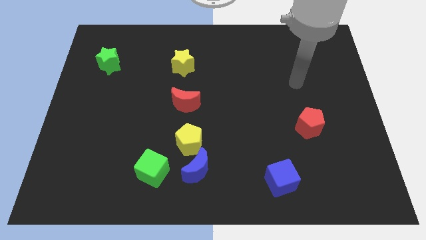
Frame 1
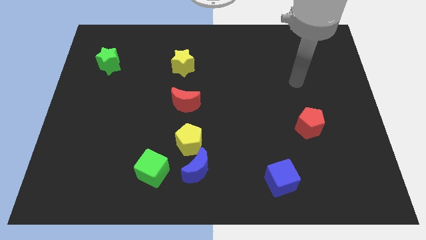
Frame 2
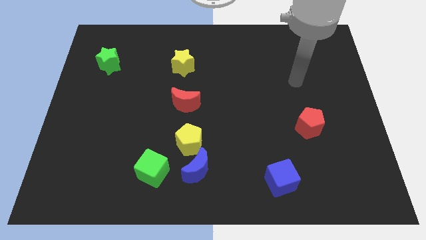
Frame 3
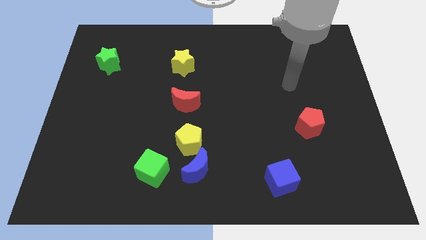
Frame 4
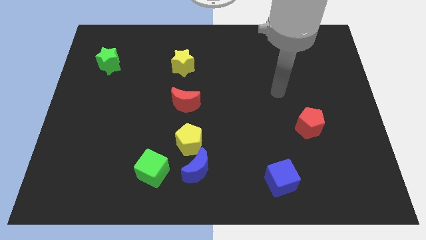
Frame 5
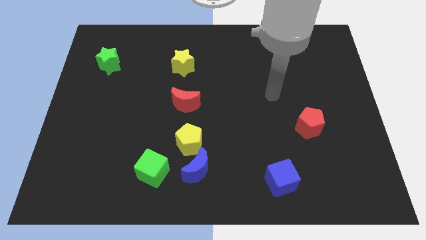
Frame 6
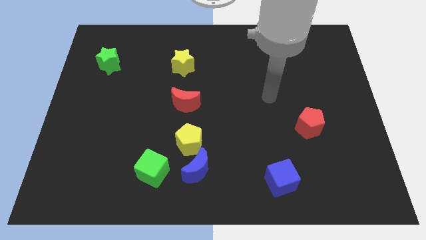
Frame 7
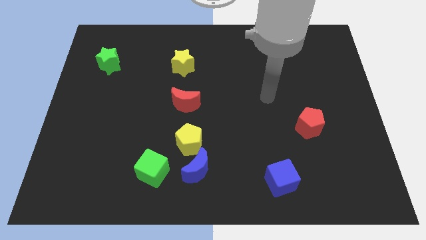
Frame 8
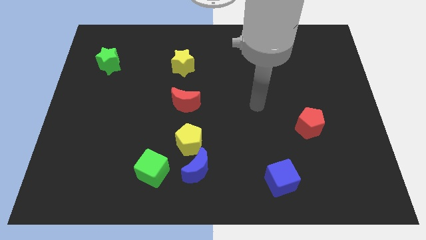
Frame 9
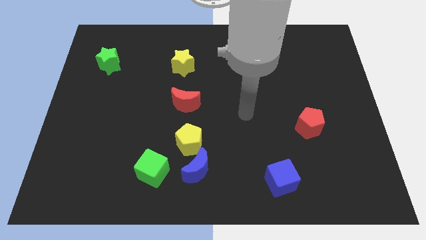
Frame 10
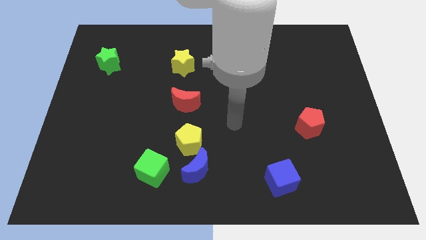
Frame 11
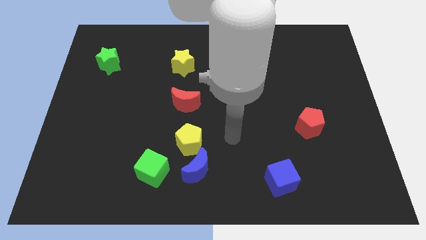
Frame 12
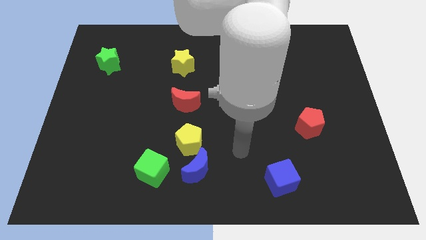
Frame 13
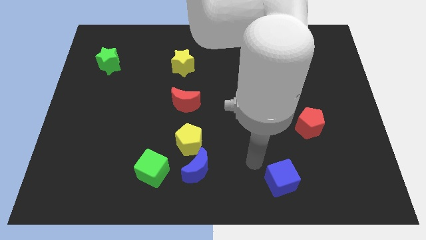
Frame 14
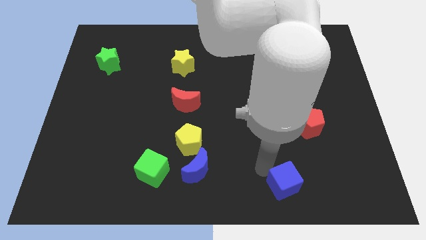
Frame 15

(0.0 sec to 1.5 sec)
move your arm towards the blue cube

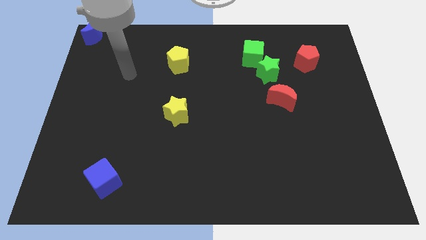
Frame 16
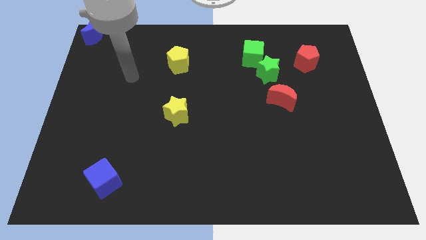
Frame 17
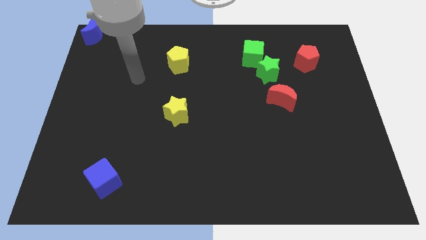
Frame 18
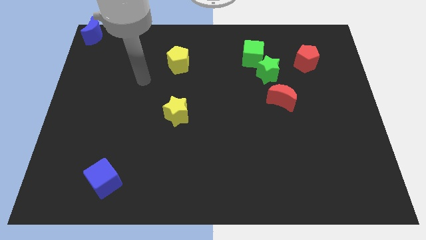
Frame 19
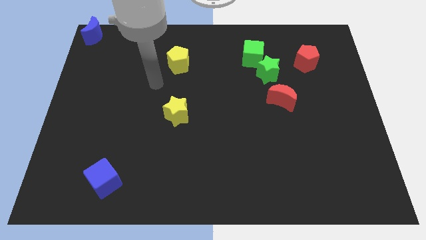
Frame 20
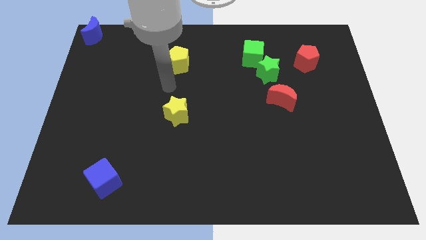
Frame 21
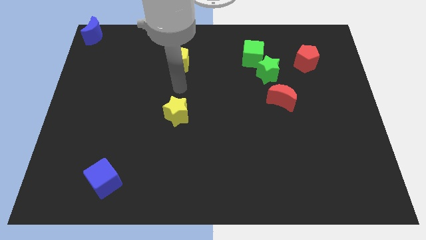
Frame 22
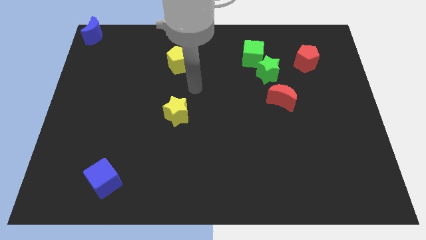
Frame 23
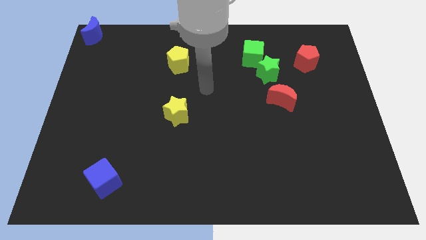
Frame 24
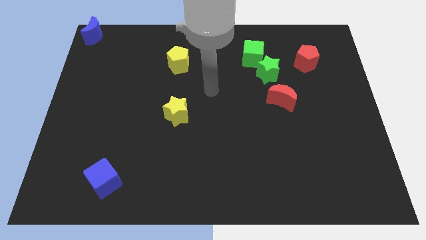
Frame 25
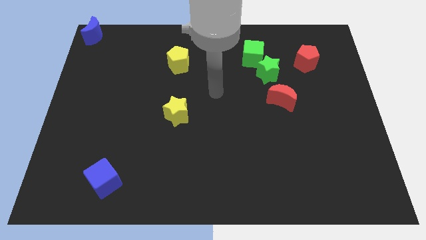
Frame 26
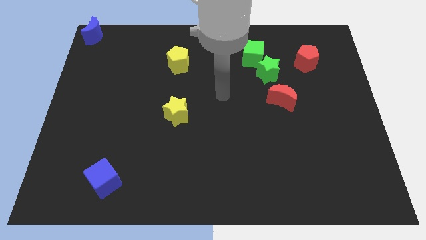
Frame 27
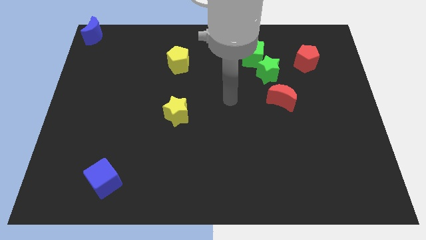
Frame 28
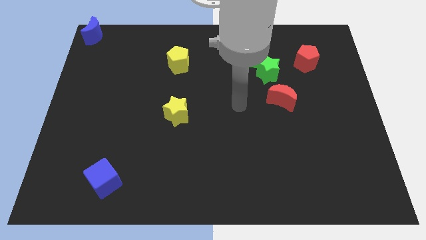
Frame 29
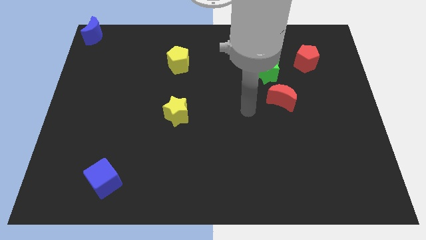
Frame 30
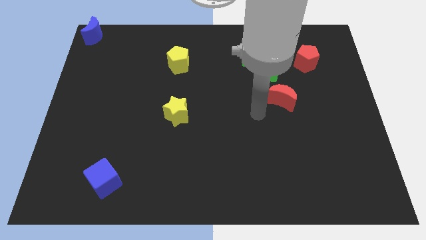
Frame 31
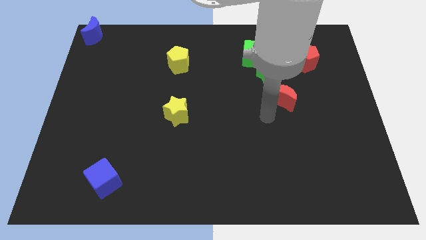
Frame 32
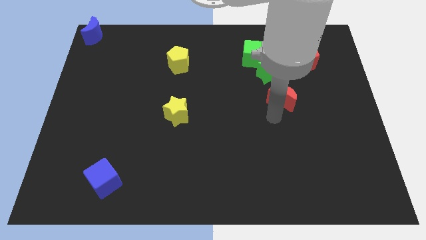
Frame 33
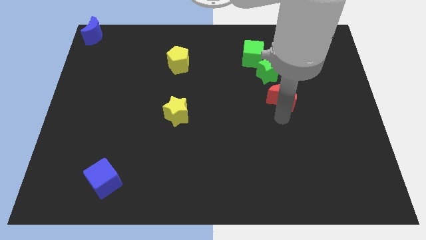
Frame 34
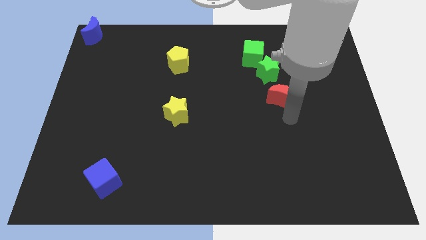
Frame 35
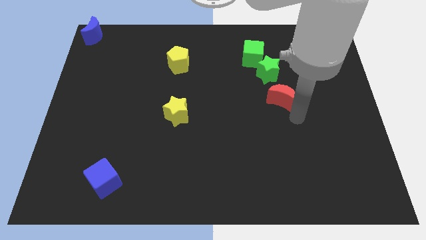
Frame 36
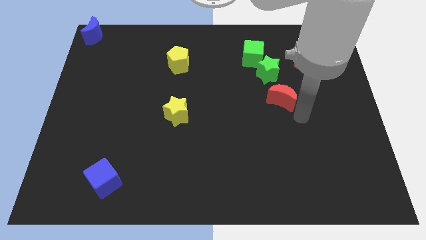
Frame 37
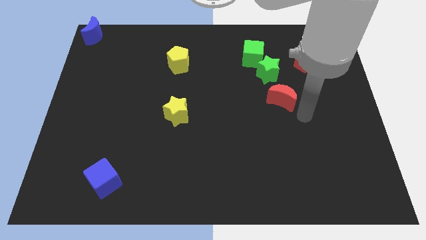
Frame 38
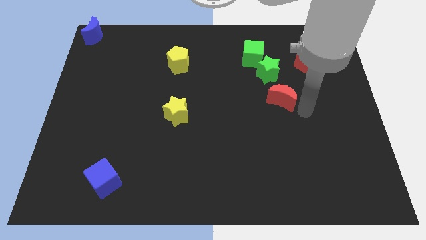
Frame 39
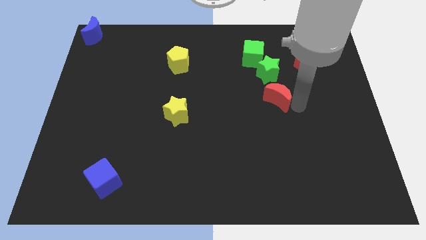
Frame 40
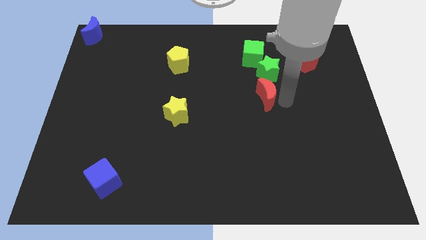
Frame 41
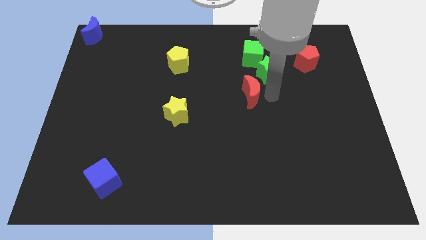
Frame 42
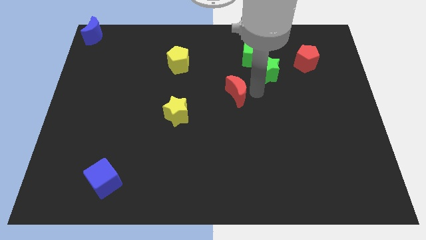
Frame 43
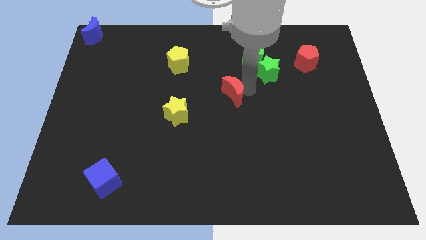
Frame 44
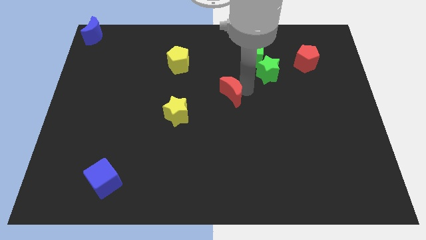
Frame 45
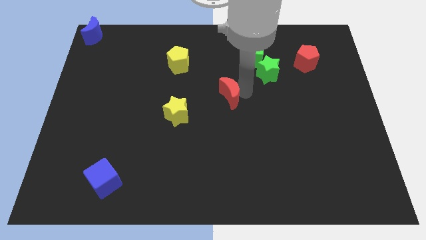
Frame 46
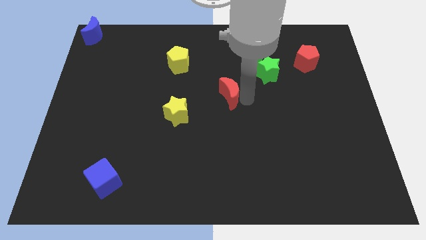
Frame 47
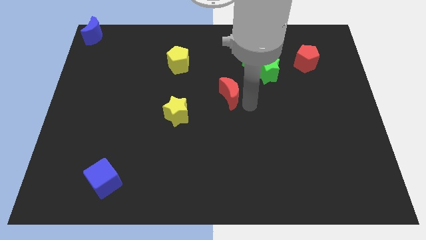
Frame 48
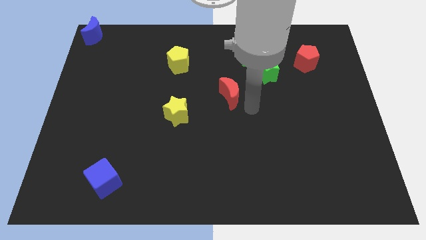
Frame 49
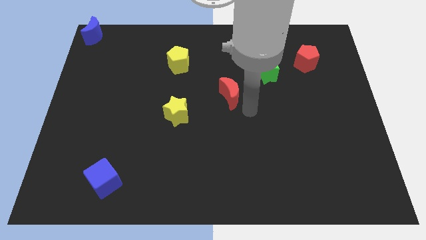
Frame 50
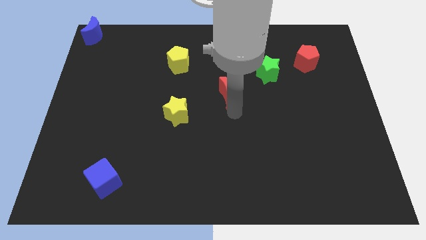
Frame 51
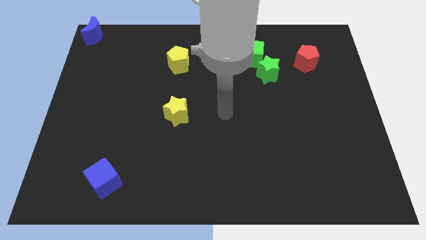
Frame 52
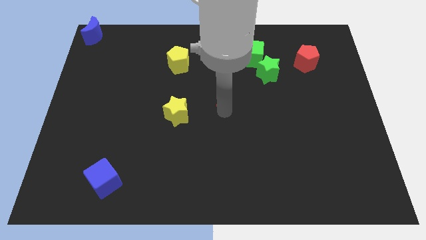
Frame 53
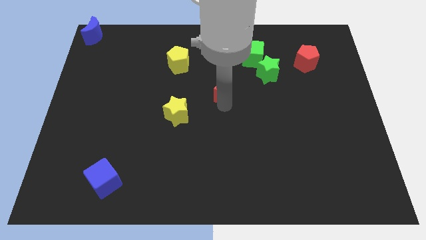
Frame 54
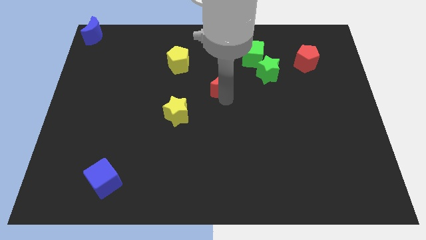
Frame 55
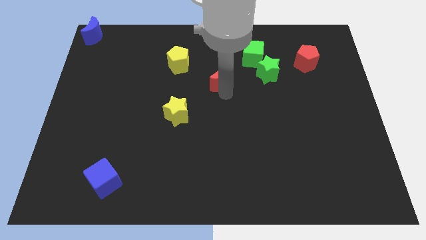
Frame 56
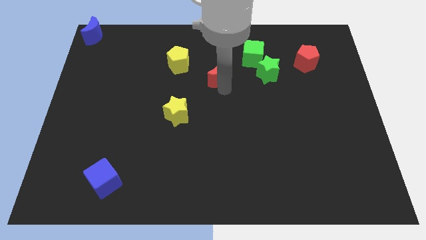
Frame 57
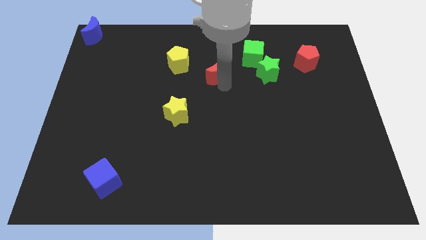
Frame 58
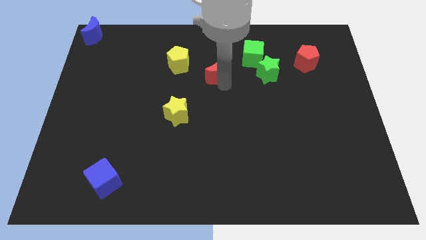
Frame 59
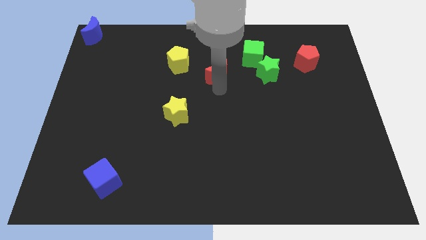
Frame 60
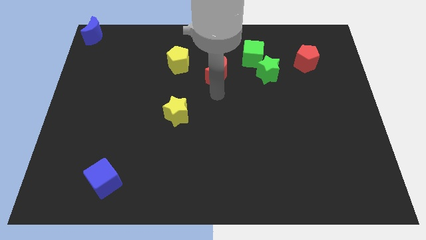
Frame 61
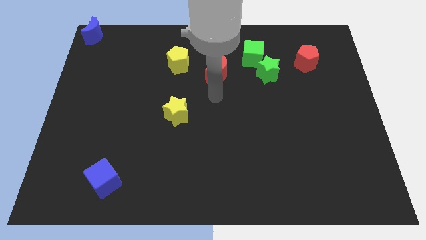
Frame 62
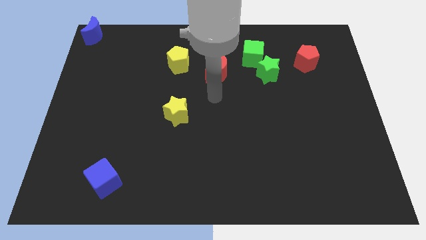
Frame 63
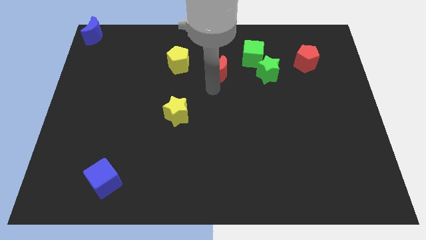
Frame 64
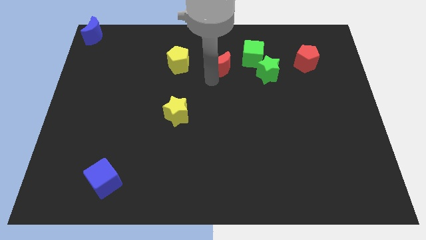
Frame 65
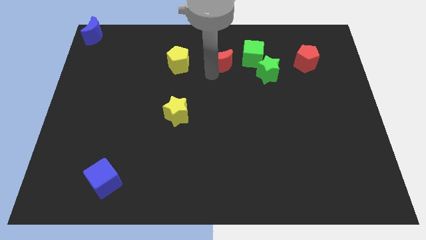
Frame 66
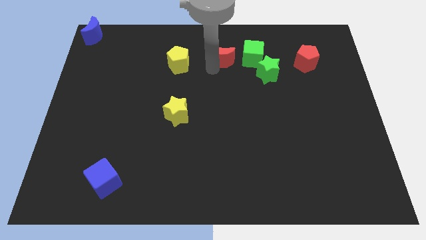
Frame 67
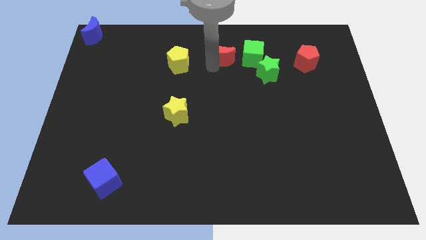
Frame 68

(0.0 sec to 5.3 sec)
push the red crescent in between yellow pentagon and green cube

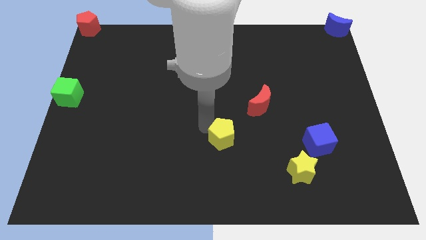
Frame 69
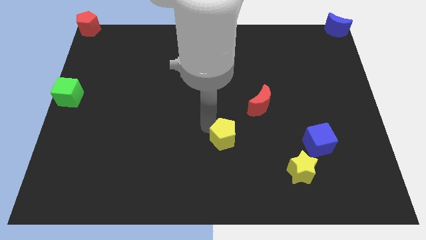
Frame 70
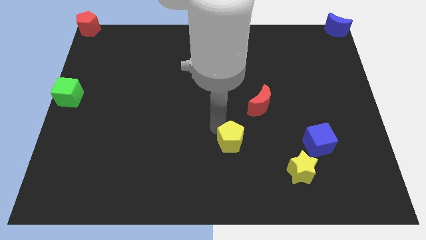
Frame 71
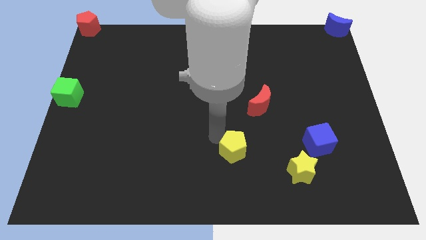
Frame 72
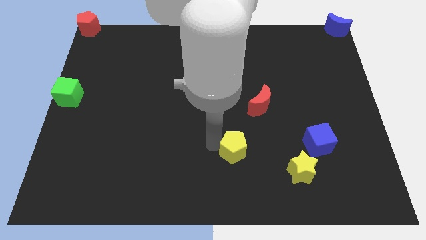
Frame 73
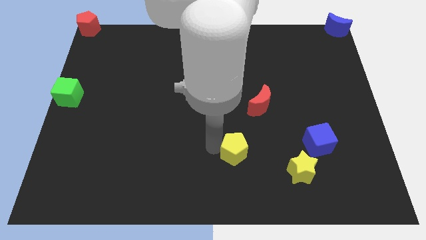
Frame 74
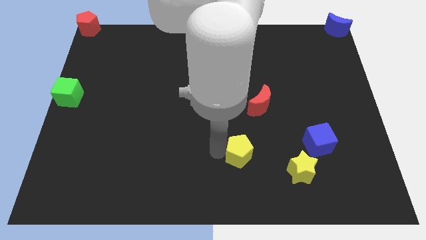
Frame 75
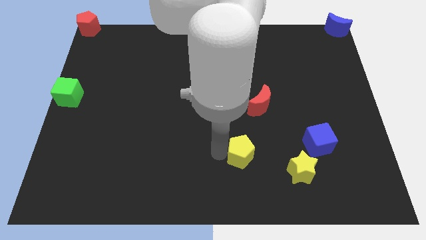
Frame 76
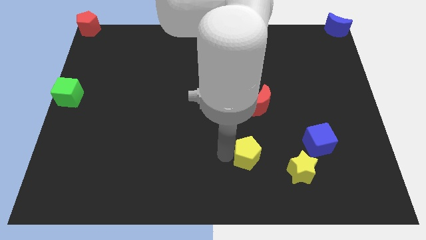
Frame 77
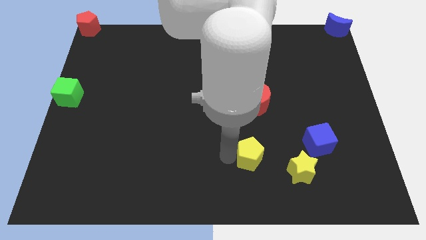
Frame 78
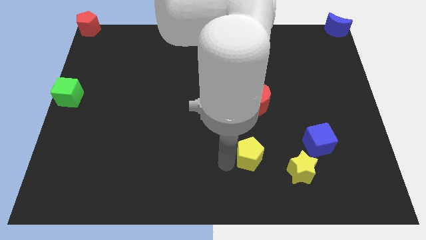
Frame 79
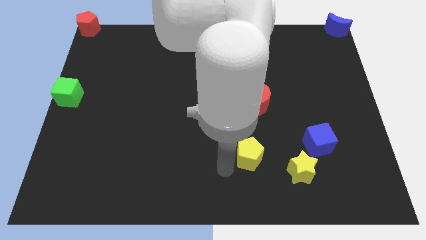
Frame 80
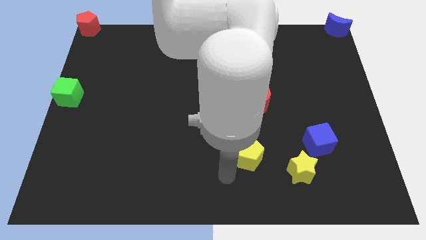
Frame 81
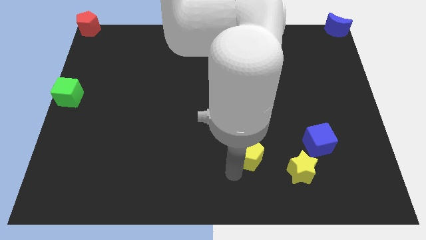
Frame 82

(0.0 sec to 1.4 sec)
push the yellow pentagon vertically at the bottom of the red crescent

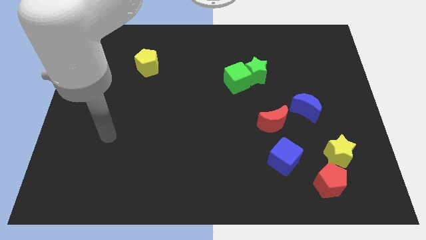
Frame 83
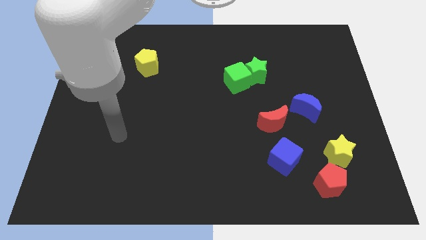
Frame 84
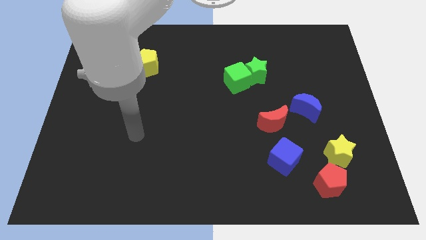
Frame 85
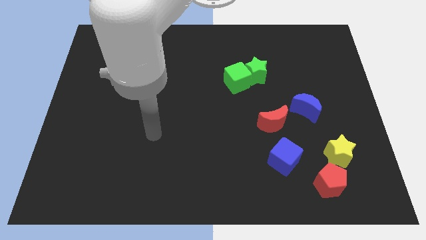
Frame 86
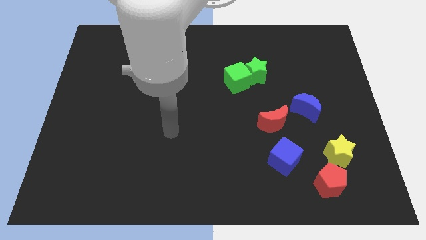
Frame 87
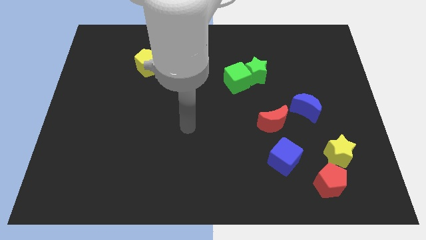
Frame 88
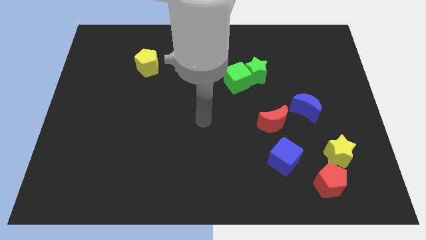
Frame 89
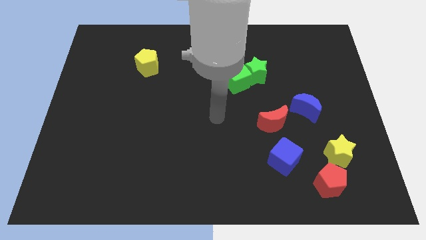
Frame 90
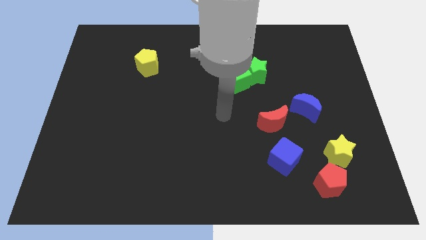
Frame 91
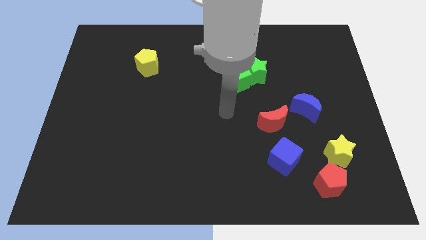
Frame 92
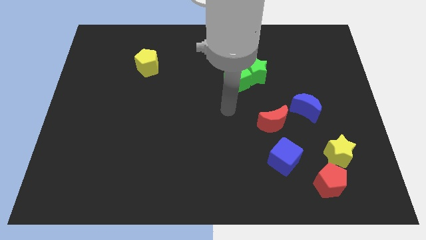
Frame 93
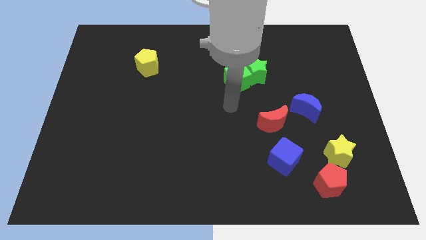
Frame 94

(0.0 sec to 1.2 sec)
move your arm towards to the green cube
